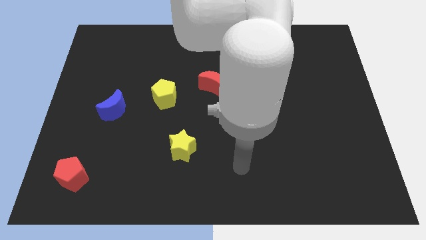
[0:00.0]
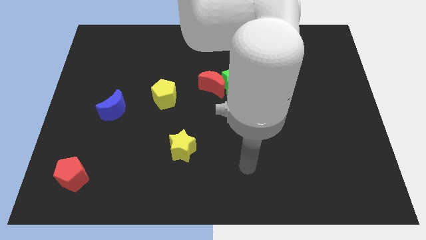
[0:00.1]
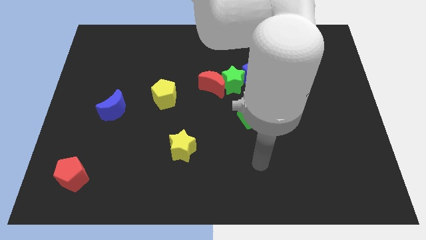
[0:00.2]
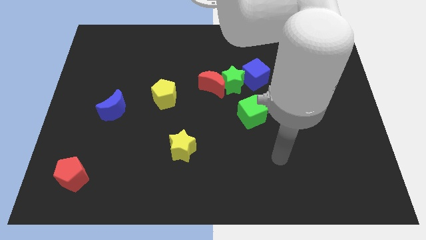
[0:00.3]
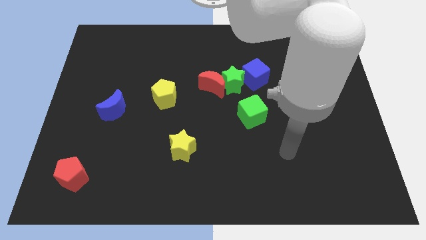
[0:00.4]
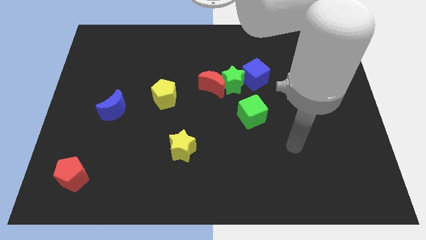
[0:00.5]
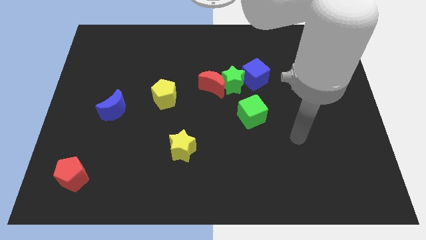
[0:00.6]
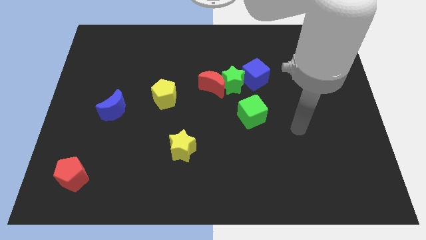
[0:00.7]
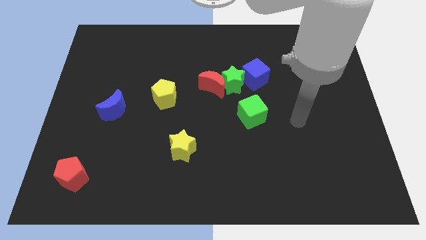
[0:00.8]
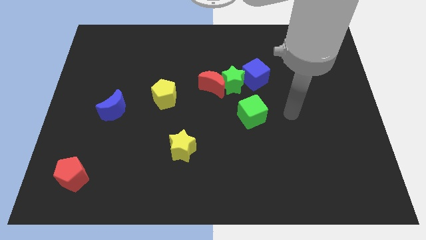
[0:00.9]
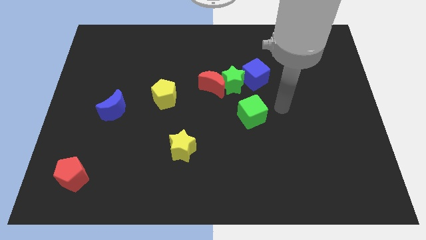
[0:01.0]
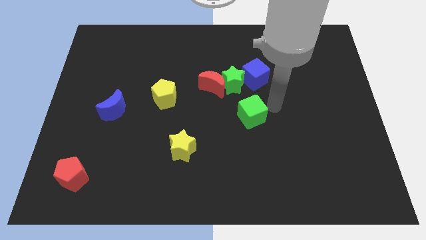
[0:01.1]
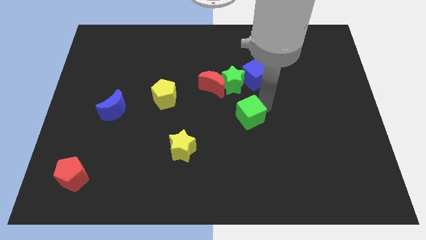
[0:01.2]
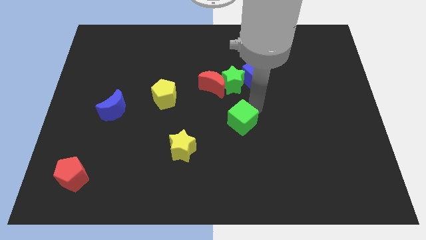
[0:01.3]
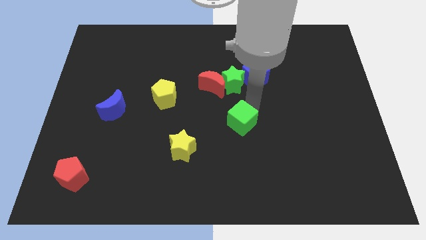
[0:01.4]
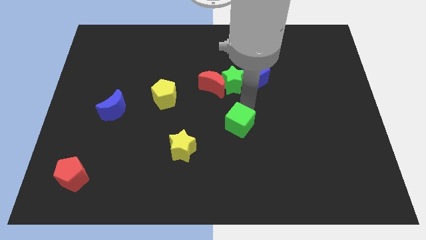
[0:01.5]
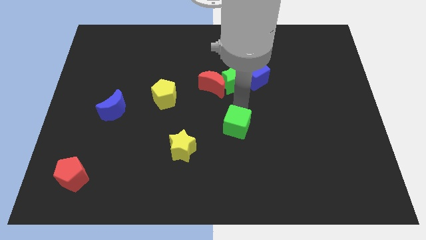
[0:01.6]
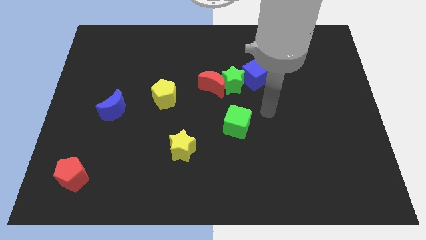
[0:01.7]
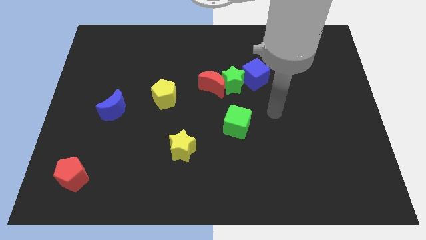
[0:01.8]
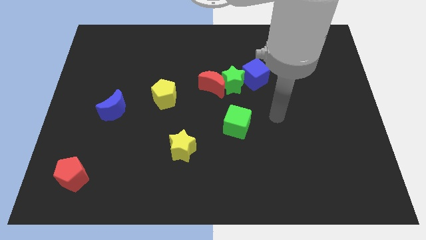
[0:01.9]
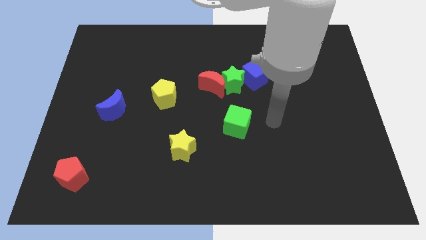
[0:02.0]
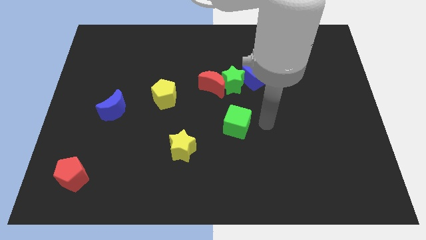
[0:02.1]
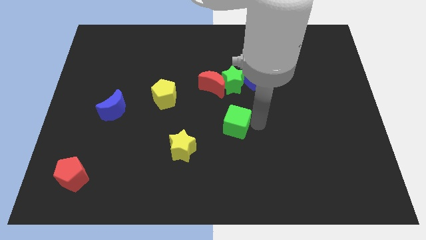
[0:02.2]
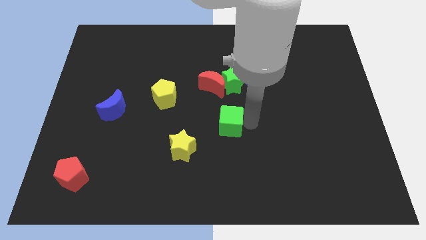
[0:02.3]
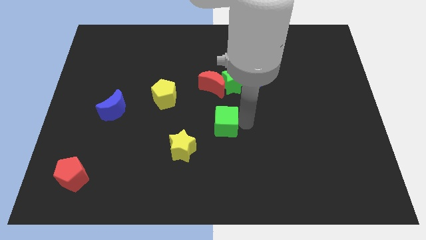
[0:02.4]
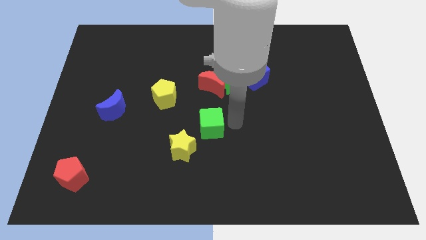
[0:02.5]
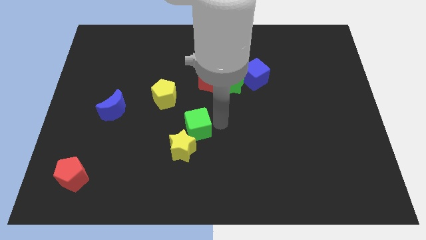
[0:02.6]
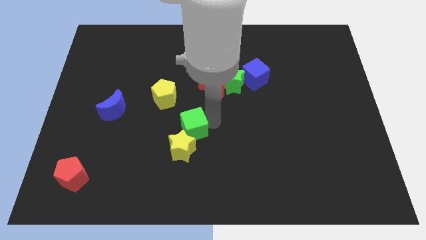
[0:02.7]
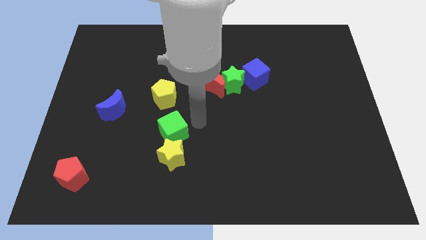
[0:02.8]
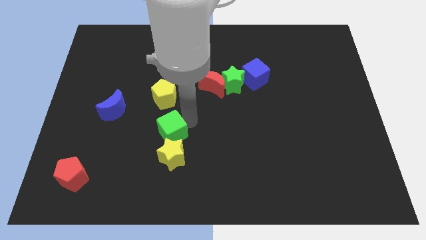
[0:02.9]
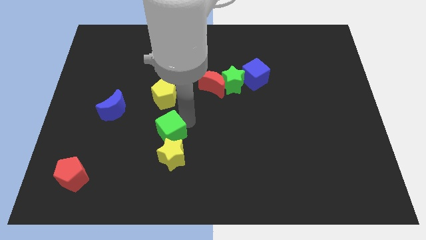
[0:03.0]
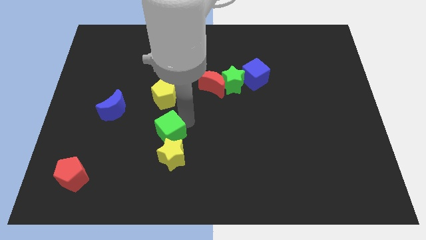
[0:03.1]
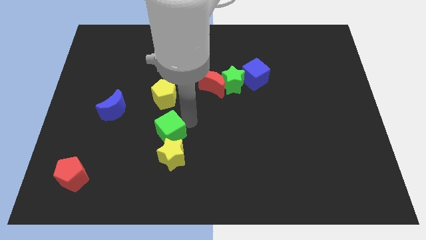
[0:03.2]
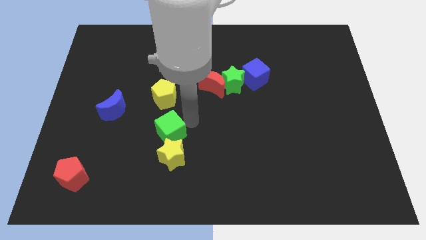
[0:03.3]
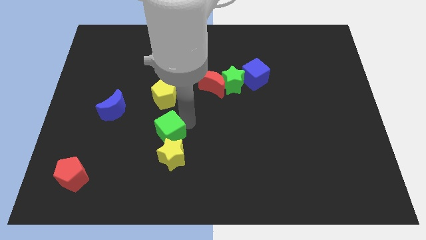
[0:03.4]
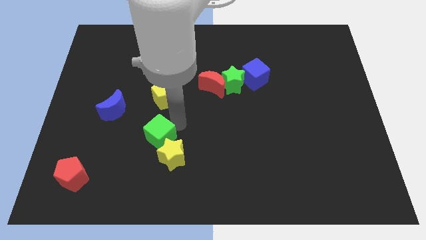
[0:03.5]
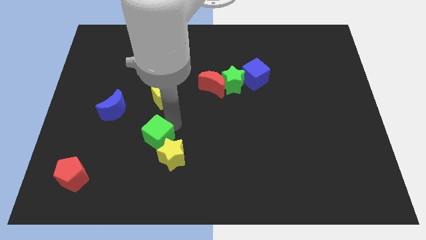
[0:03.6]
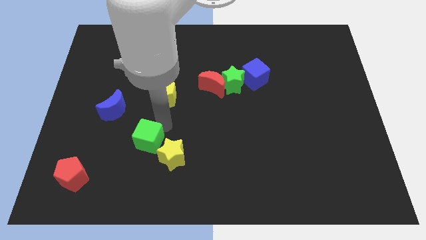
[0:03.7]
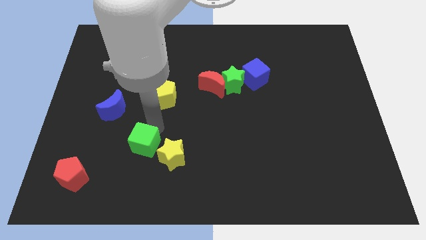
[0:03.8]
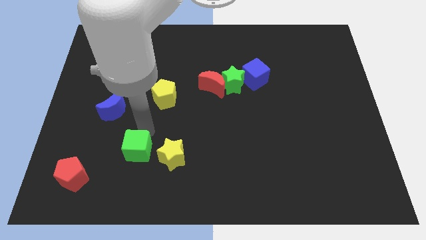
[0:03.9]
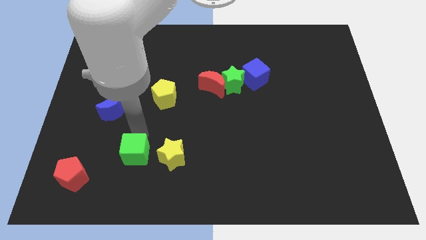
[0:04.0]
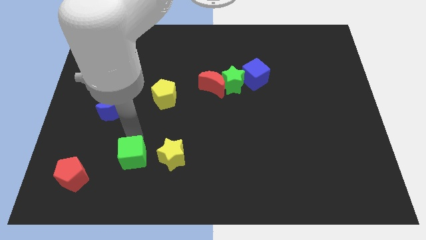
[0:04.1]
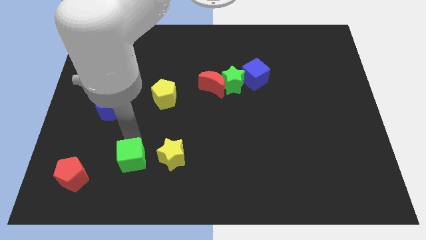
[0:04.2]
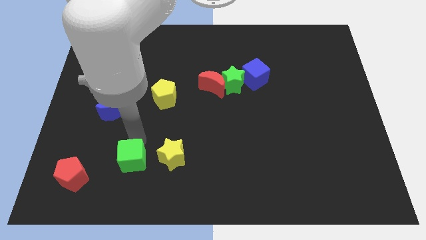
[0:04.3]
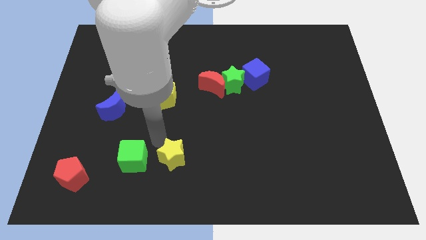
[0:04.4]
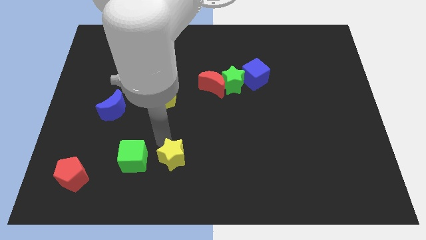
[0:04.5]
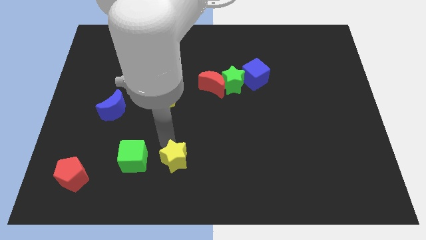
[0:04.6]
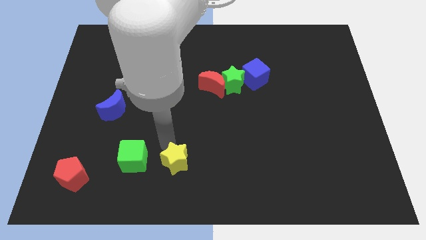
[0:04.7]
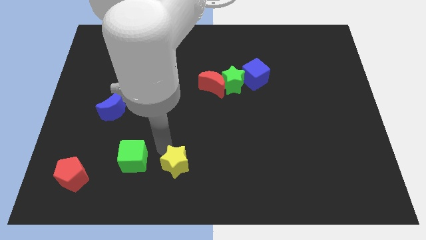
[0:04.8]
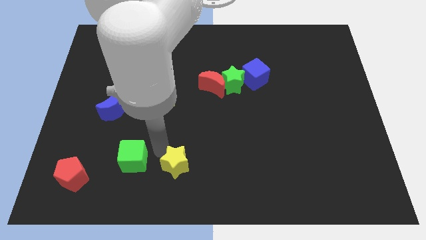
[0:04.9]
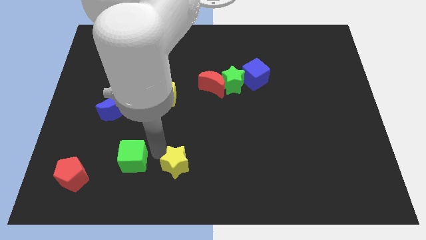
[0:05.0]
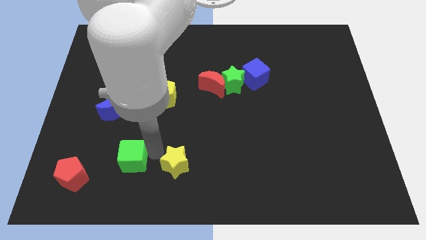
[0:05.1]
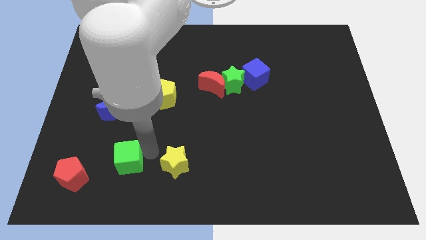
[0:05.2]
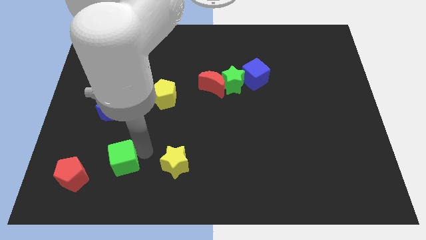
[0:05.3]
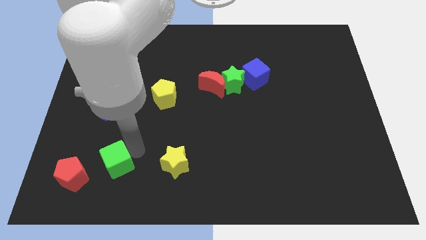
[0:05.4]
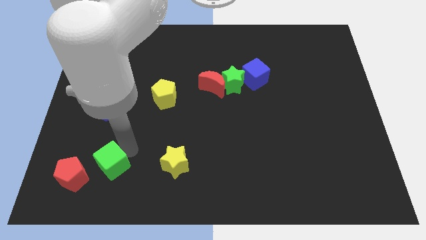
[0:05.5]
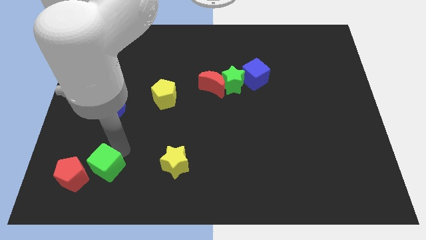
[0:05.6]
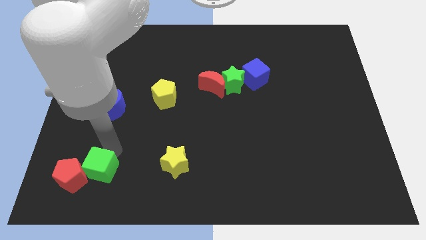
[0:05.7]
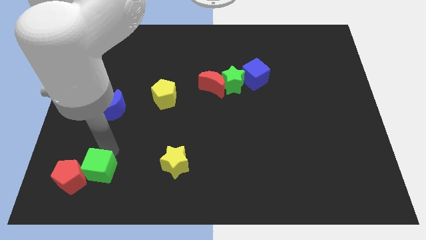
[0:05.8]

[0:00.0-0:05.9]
push the green cube to the red pentagon

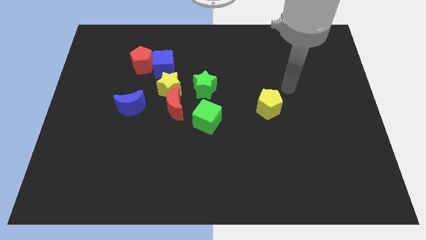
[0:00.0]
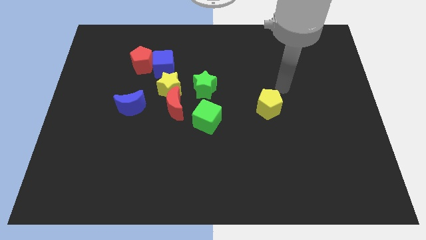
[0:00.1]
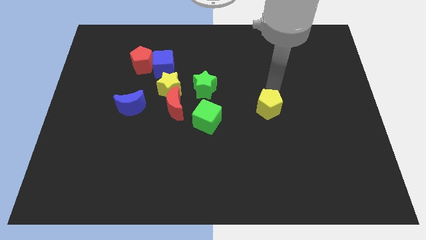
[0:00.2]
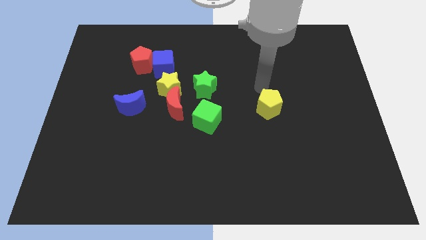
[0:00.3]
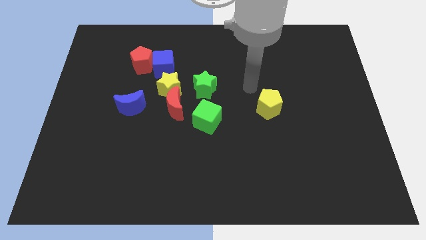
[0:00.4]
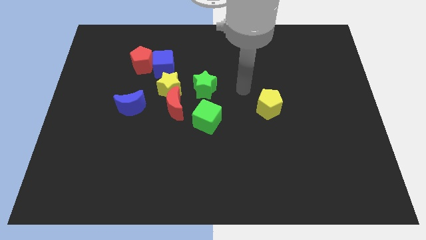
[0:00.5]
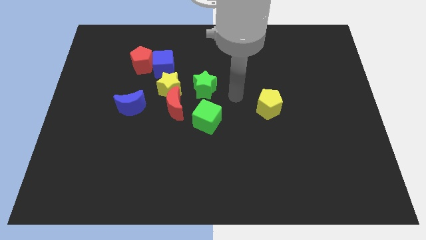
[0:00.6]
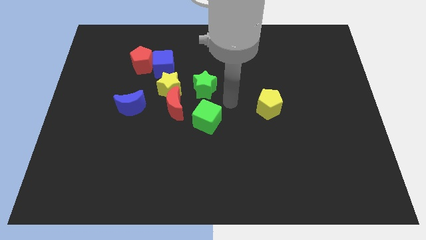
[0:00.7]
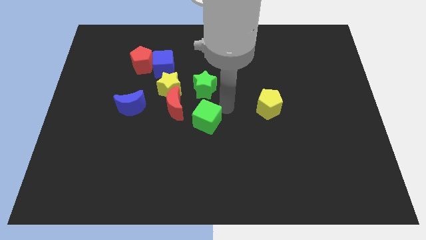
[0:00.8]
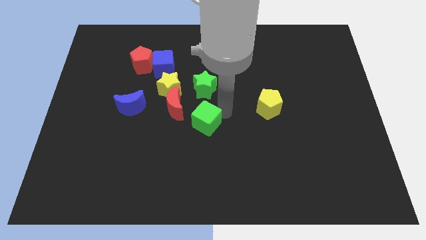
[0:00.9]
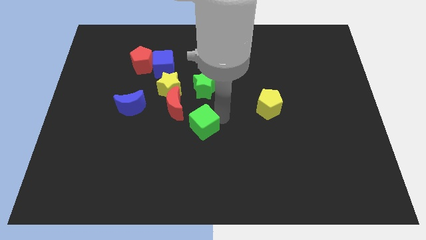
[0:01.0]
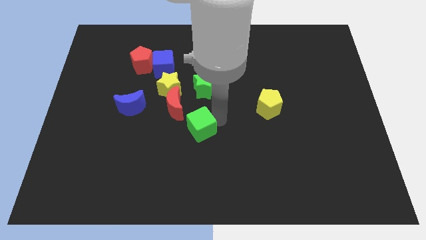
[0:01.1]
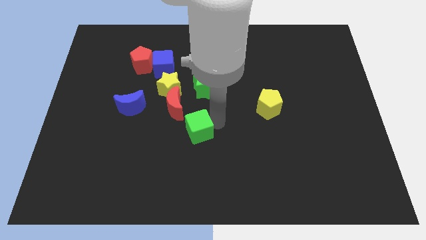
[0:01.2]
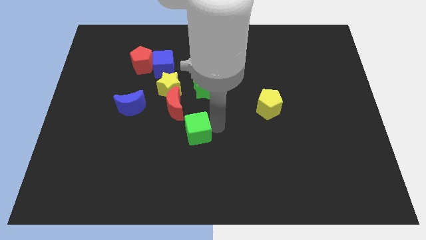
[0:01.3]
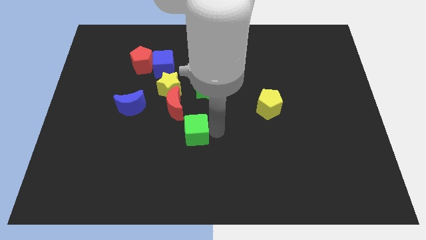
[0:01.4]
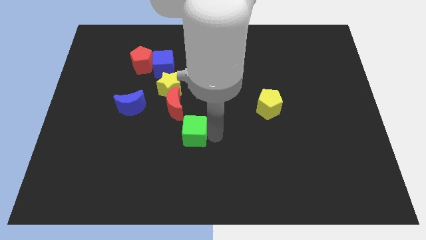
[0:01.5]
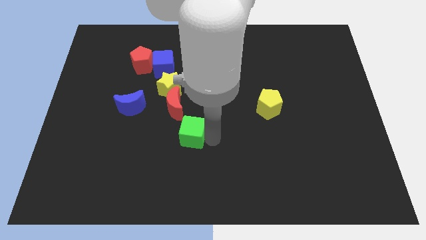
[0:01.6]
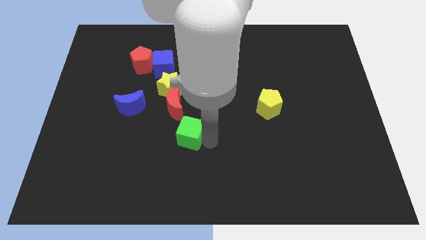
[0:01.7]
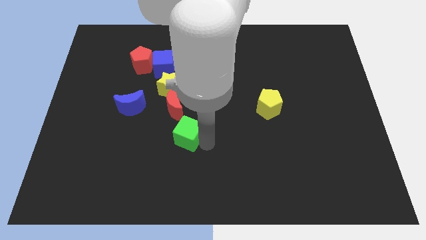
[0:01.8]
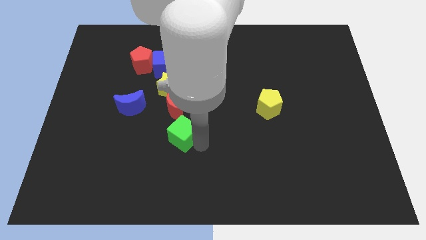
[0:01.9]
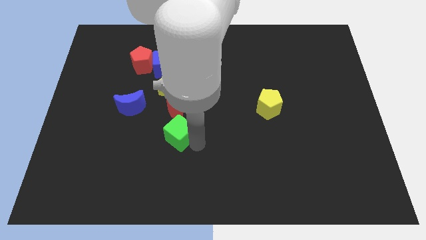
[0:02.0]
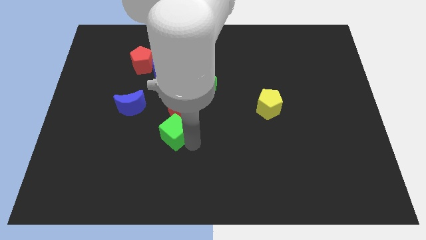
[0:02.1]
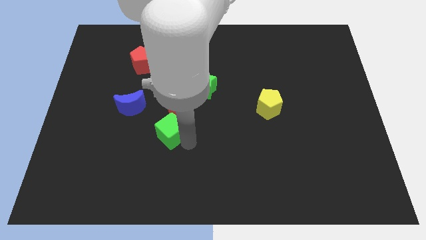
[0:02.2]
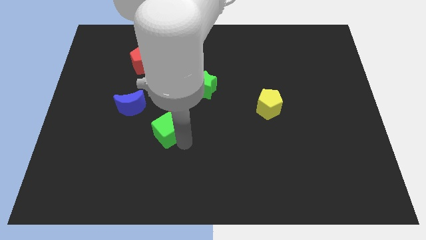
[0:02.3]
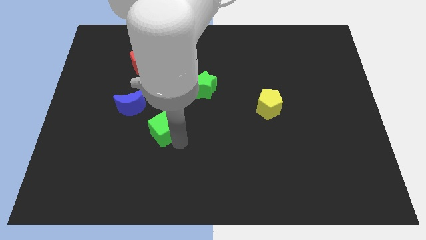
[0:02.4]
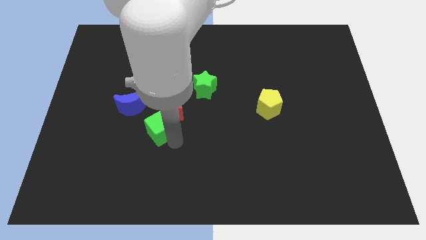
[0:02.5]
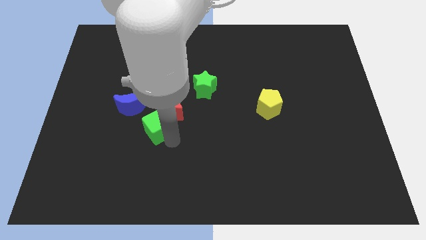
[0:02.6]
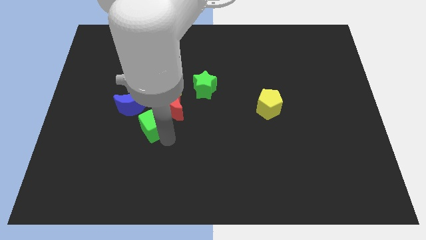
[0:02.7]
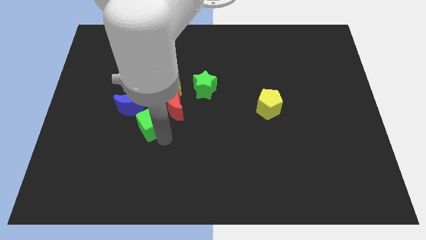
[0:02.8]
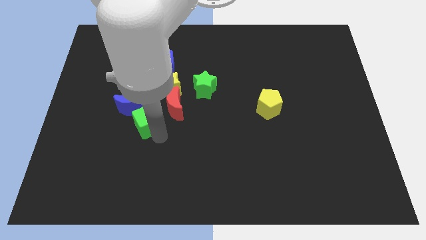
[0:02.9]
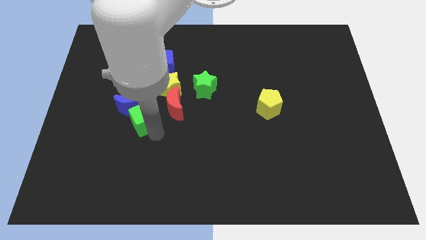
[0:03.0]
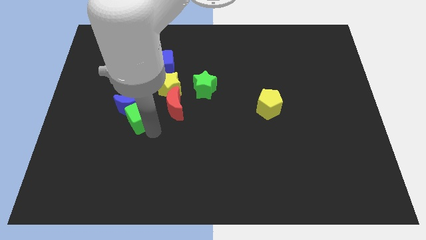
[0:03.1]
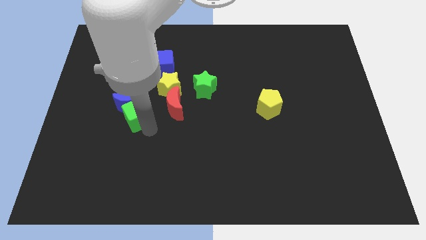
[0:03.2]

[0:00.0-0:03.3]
push the green cube towards the blue moon
